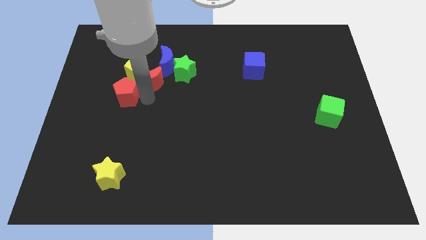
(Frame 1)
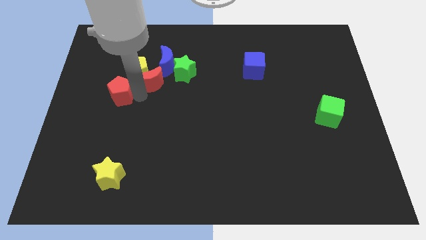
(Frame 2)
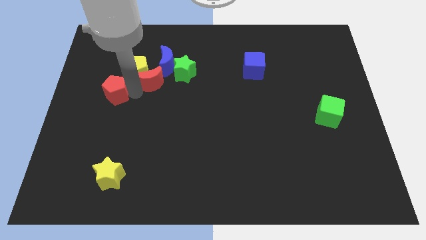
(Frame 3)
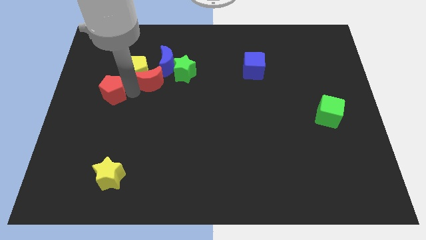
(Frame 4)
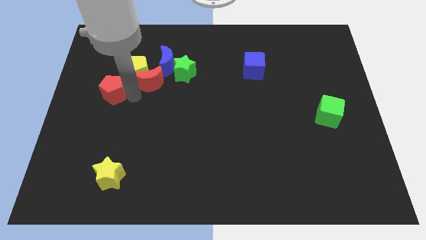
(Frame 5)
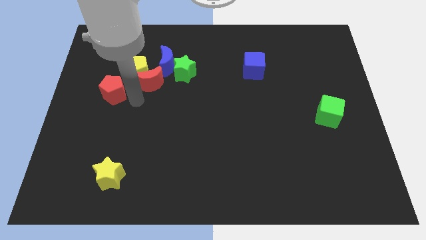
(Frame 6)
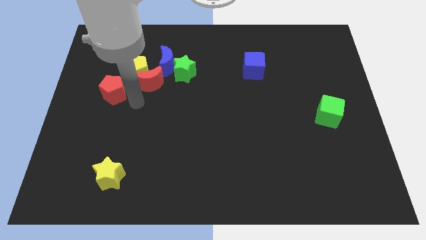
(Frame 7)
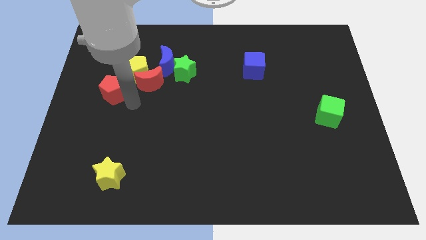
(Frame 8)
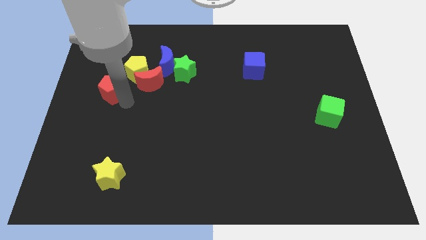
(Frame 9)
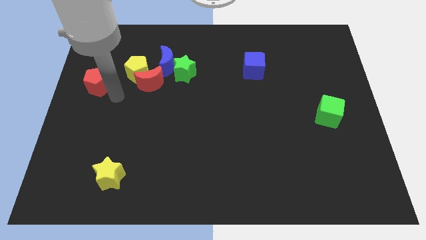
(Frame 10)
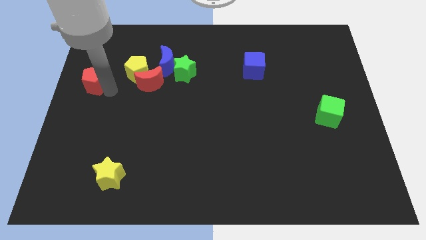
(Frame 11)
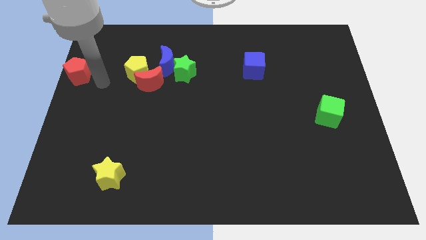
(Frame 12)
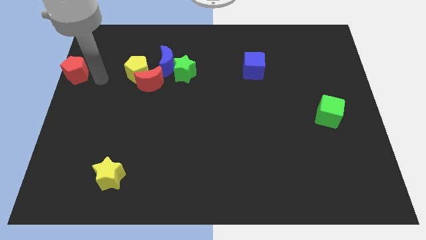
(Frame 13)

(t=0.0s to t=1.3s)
move the red pentagon to the left of red moon

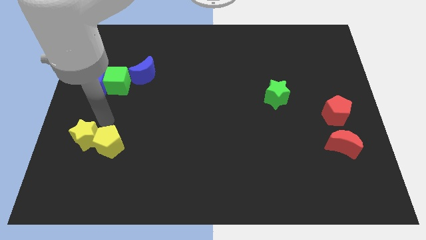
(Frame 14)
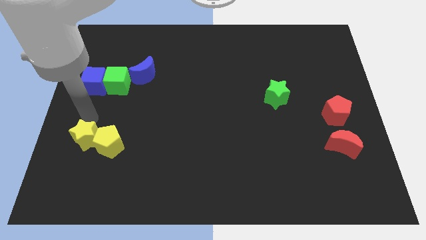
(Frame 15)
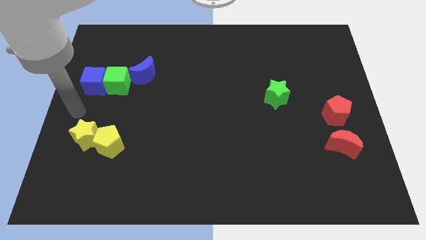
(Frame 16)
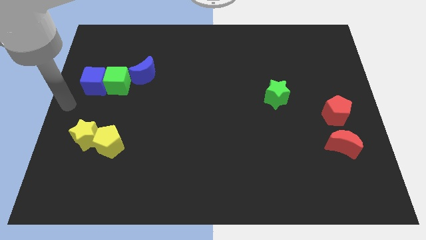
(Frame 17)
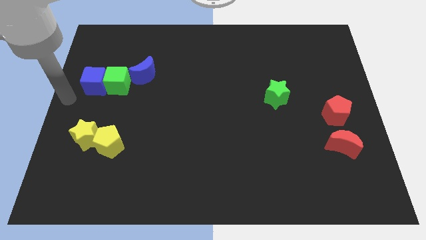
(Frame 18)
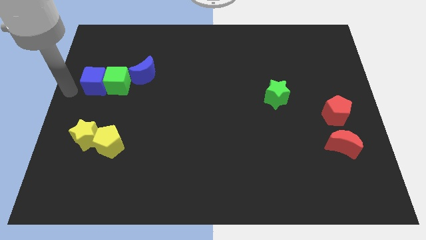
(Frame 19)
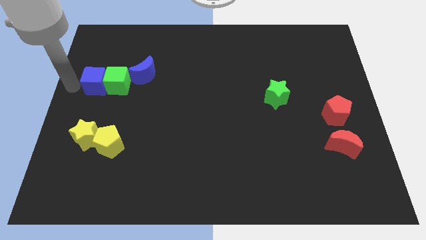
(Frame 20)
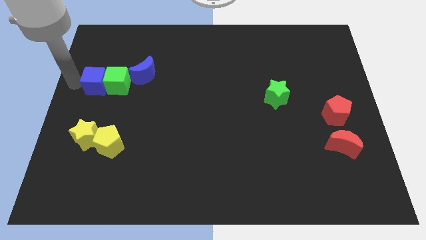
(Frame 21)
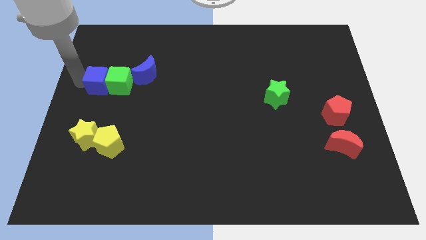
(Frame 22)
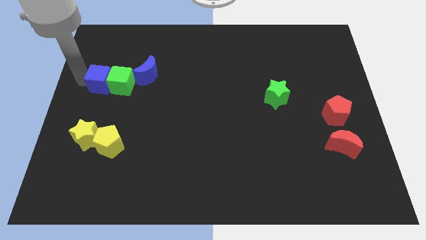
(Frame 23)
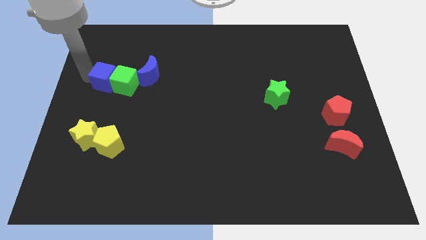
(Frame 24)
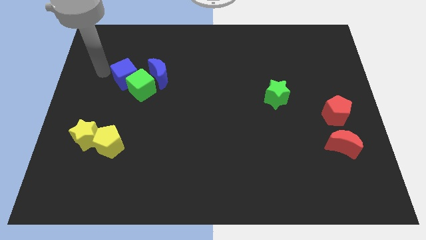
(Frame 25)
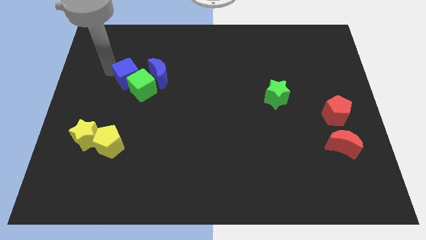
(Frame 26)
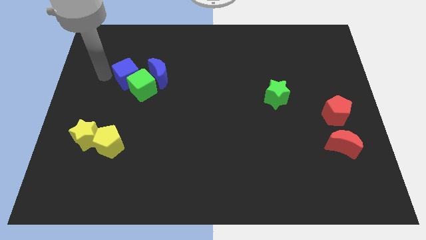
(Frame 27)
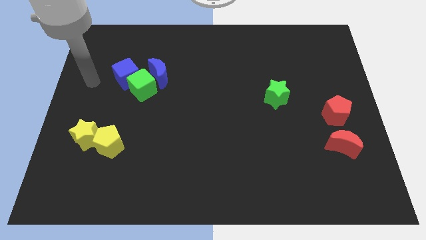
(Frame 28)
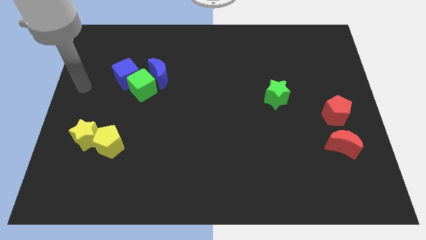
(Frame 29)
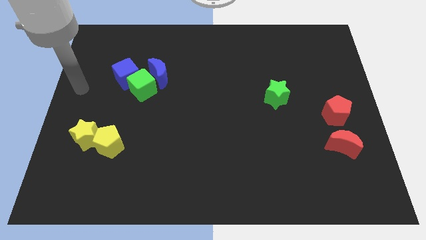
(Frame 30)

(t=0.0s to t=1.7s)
push the cubes into blue moon to the left

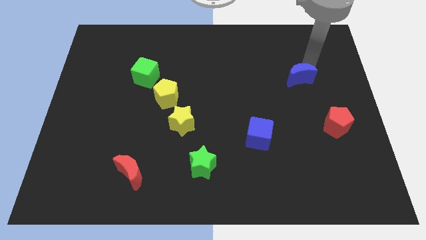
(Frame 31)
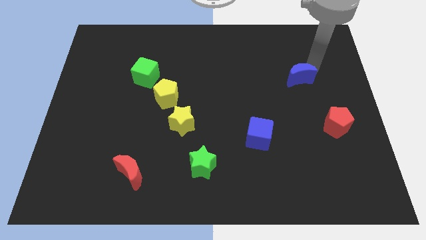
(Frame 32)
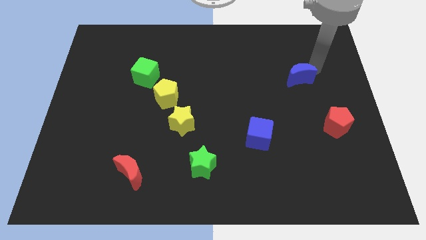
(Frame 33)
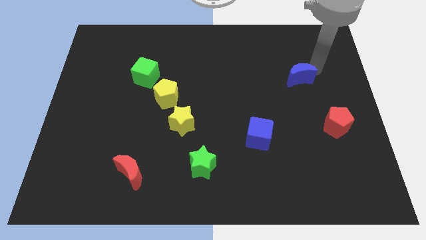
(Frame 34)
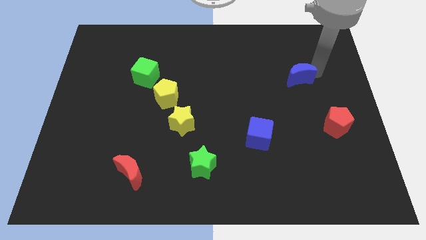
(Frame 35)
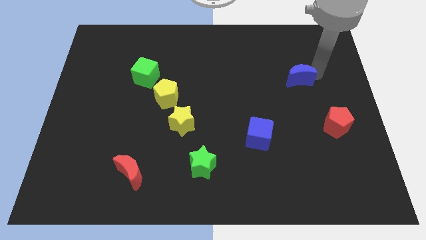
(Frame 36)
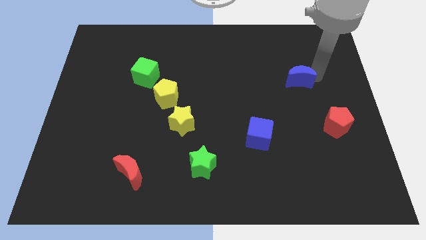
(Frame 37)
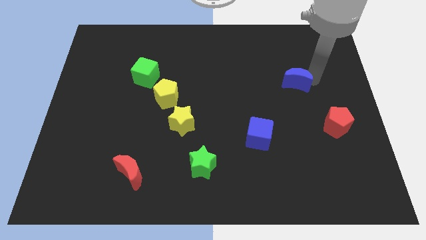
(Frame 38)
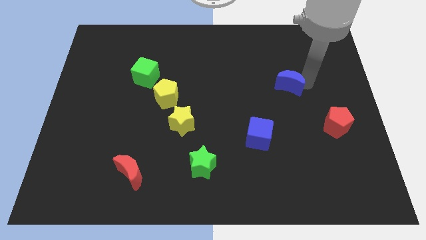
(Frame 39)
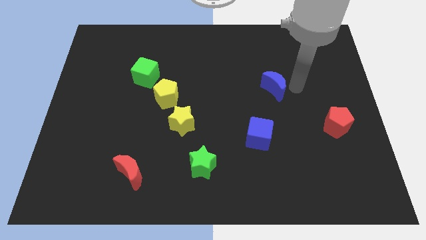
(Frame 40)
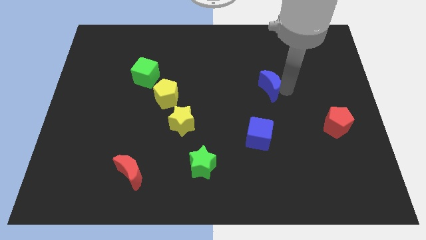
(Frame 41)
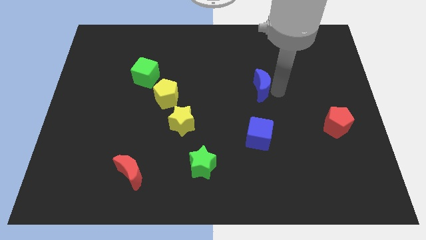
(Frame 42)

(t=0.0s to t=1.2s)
place the blue moon vertically to blue cube

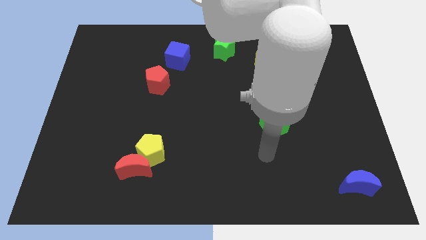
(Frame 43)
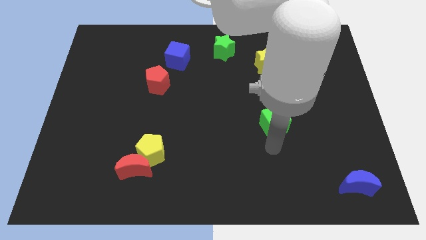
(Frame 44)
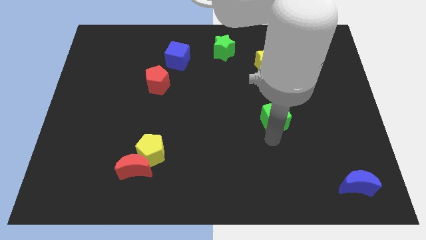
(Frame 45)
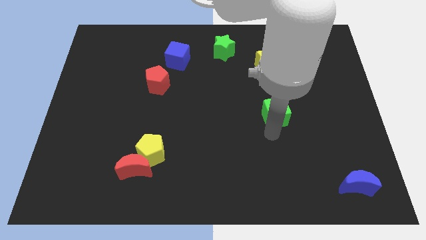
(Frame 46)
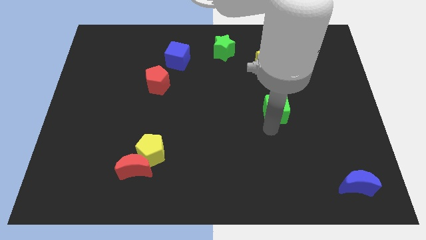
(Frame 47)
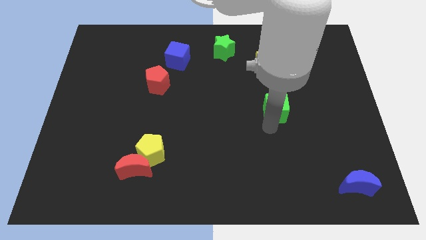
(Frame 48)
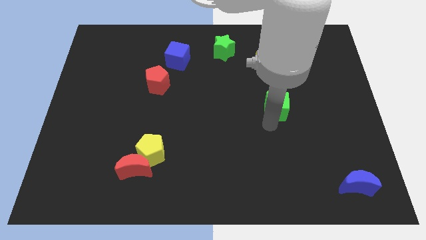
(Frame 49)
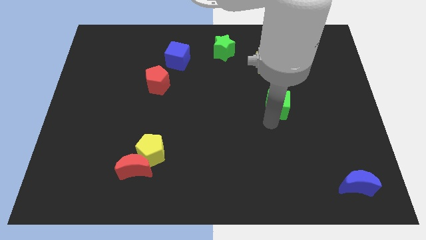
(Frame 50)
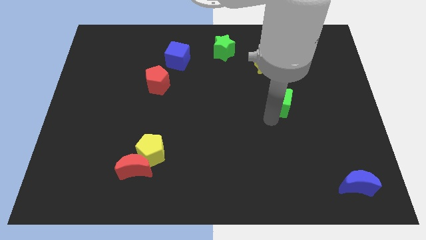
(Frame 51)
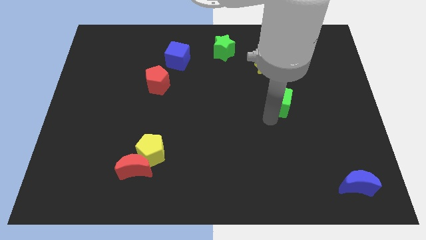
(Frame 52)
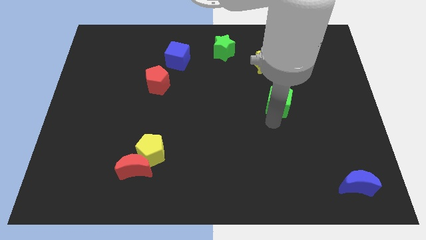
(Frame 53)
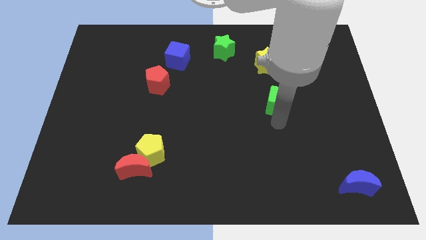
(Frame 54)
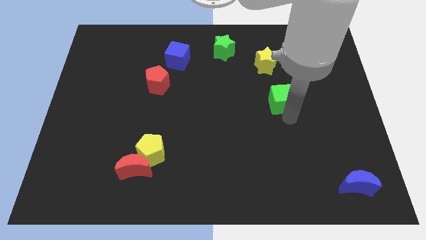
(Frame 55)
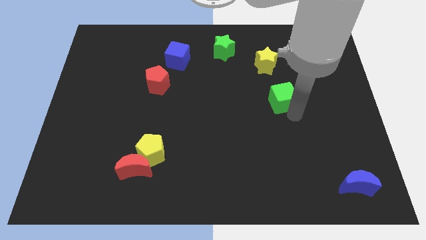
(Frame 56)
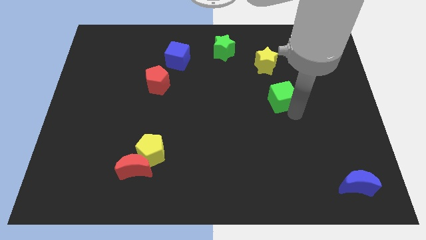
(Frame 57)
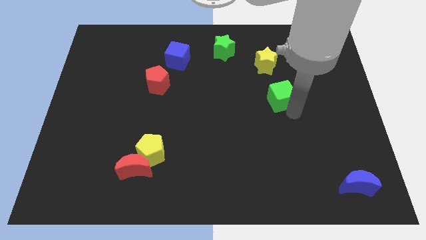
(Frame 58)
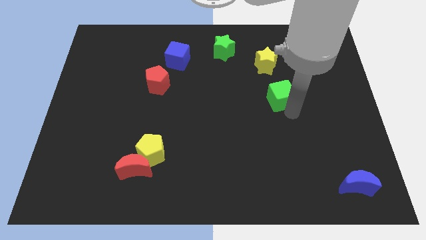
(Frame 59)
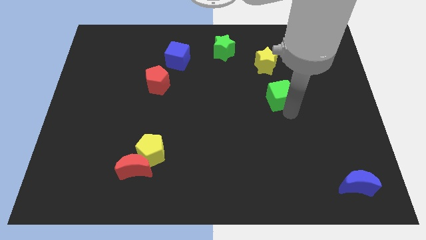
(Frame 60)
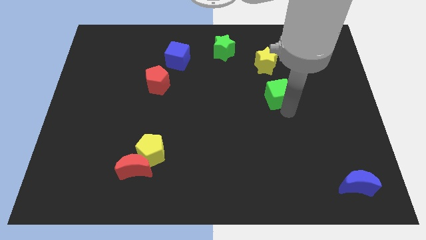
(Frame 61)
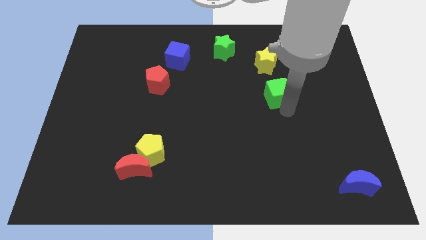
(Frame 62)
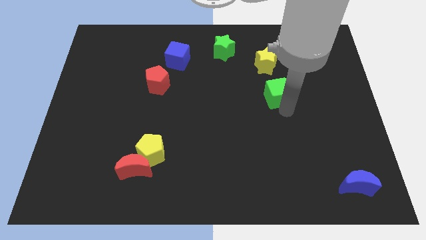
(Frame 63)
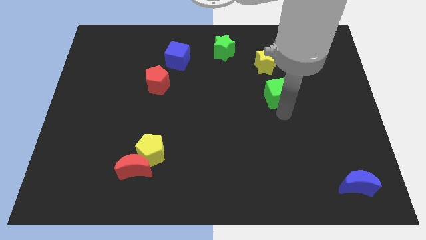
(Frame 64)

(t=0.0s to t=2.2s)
put the green cube underneath the yellow star

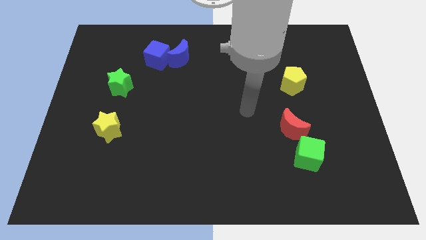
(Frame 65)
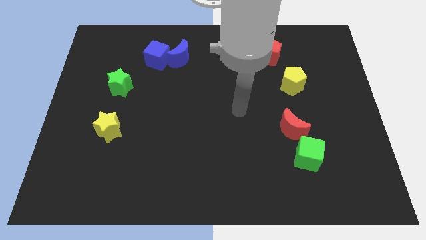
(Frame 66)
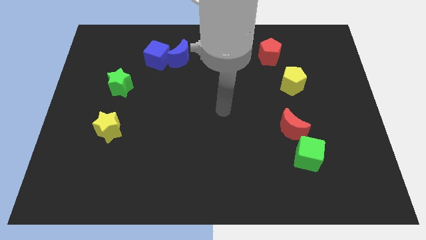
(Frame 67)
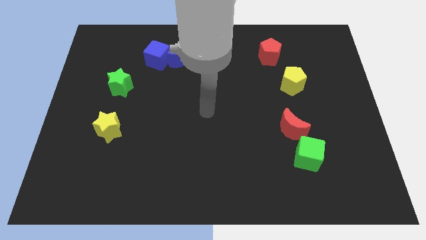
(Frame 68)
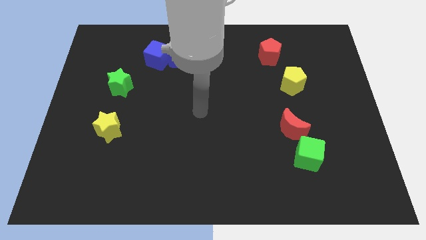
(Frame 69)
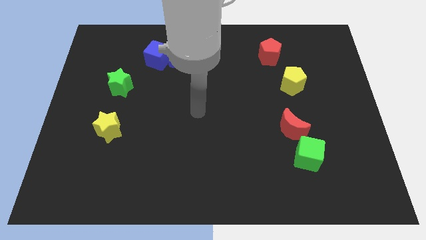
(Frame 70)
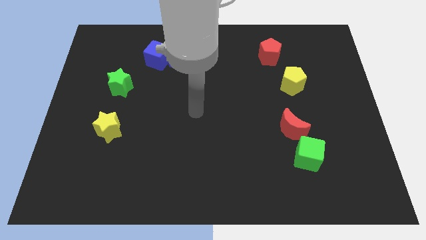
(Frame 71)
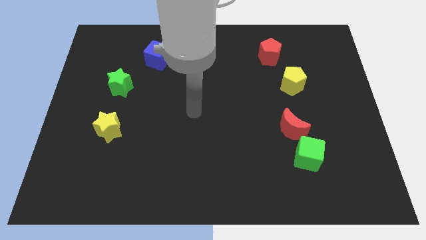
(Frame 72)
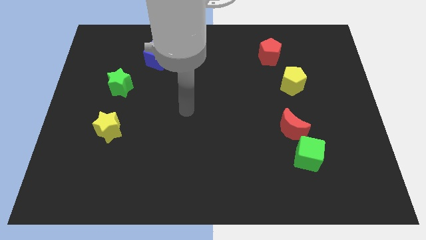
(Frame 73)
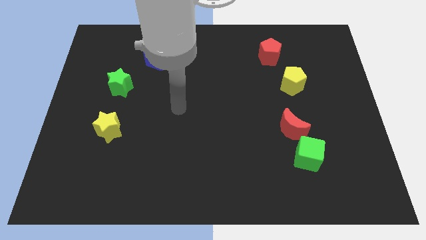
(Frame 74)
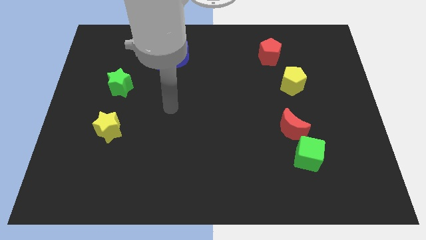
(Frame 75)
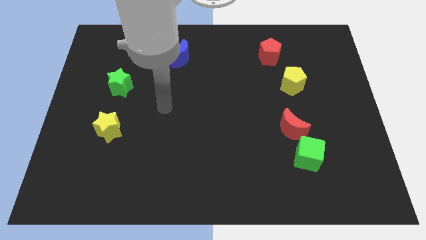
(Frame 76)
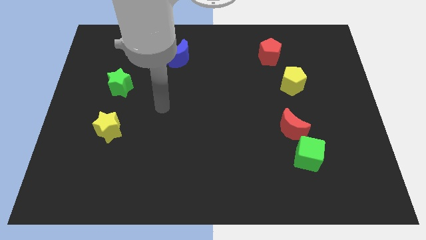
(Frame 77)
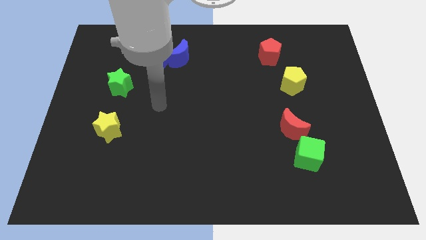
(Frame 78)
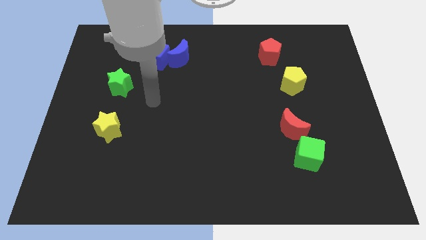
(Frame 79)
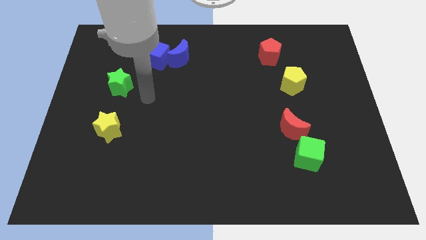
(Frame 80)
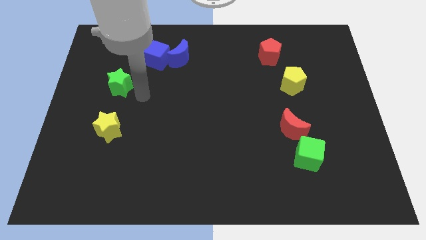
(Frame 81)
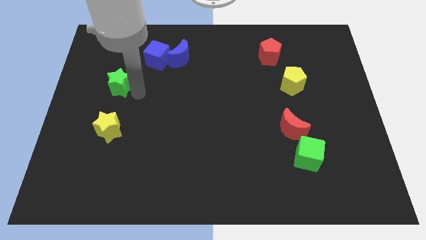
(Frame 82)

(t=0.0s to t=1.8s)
move robot arm towards the green star

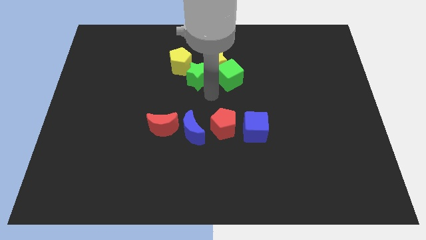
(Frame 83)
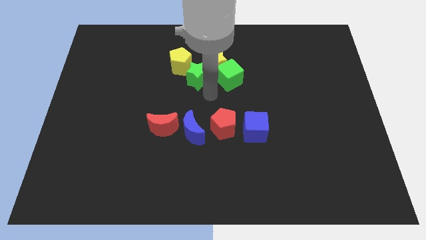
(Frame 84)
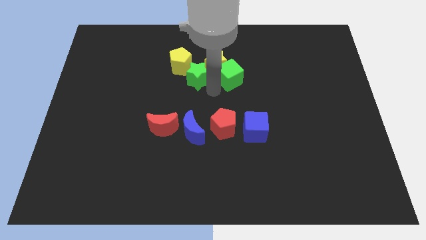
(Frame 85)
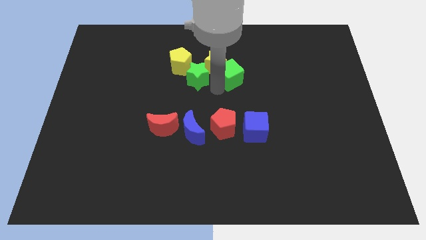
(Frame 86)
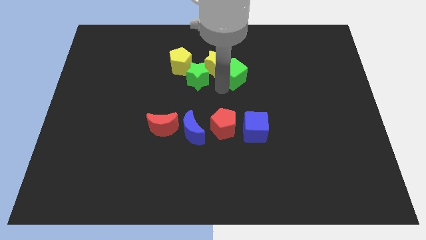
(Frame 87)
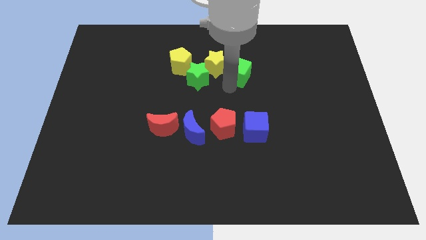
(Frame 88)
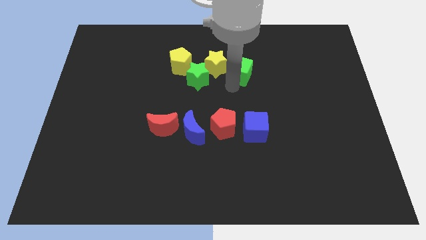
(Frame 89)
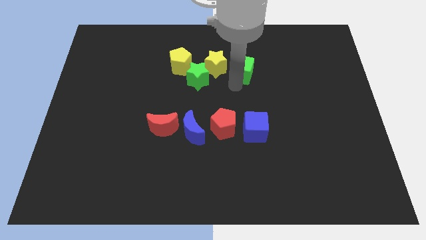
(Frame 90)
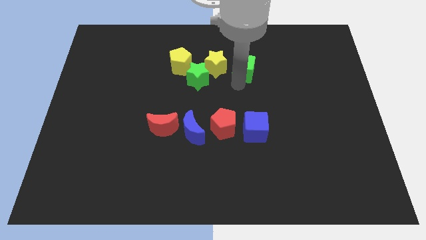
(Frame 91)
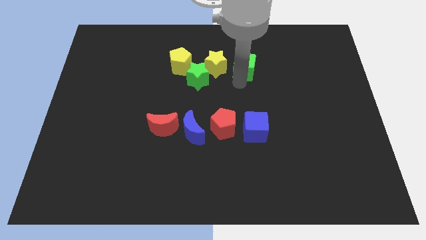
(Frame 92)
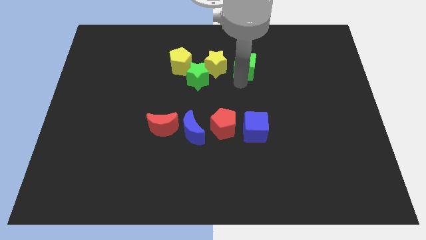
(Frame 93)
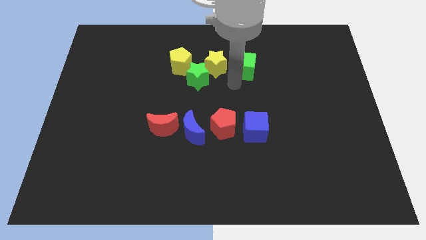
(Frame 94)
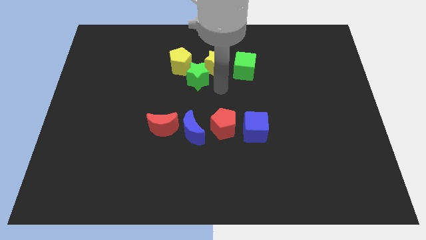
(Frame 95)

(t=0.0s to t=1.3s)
separate the green cube from the yellow star
